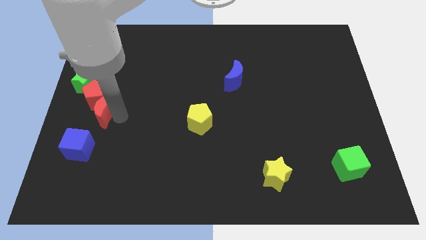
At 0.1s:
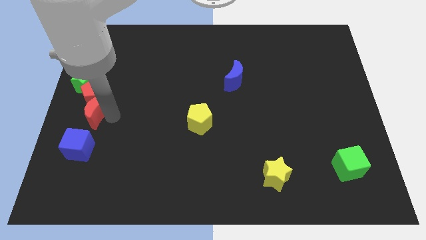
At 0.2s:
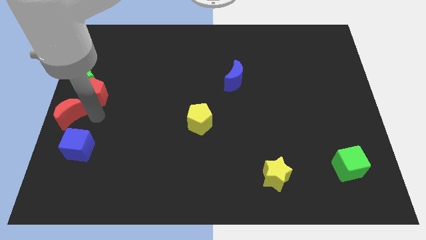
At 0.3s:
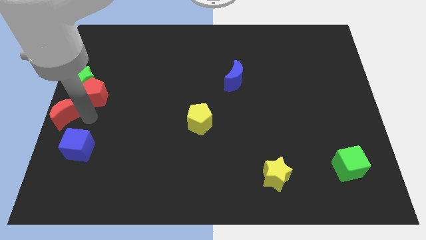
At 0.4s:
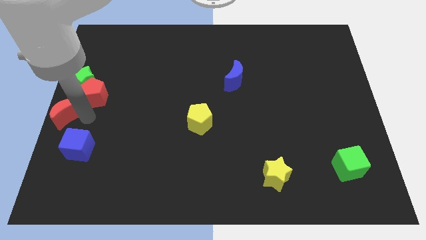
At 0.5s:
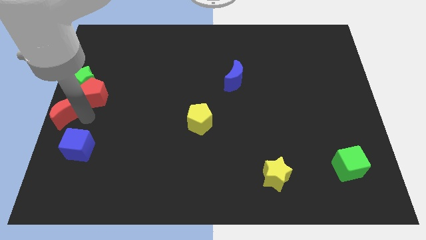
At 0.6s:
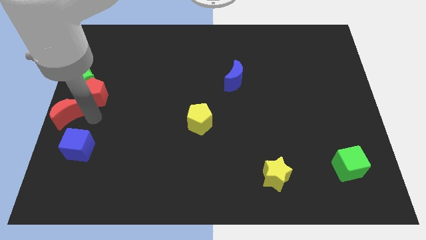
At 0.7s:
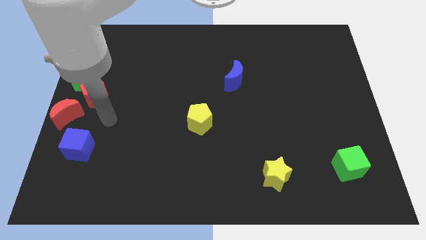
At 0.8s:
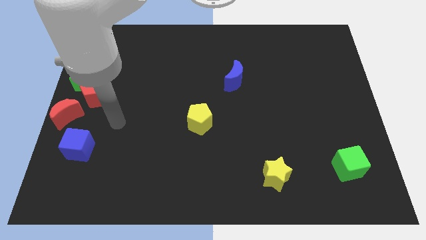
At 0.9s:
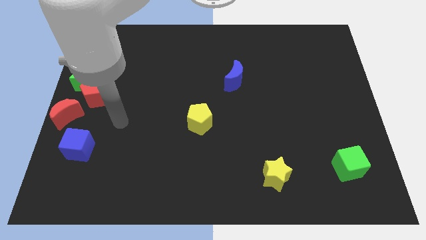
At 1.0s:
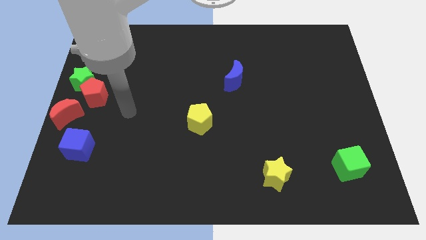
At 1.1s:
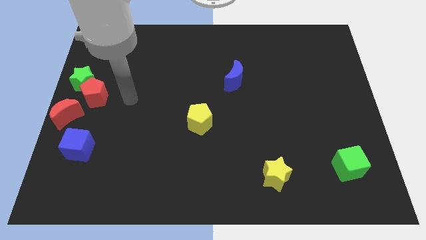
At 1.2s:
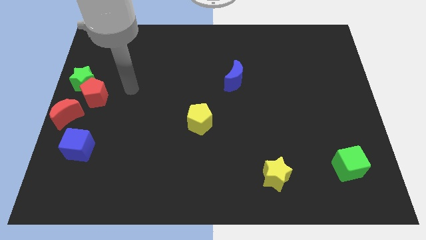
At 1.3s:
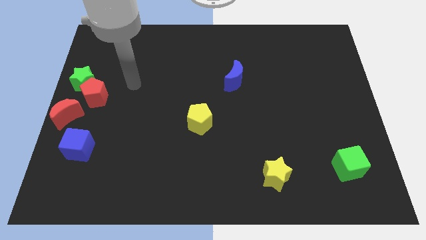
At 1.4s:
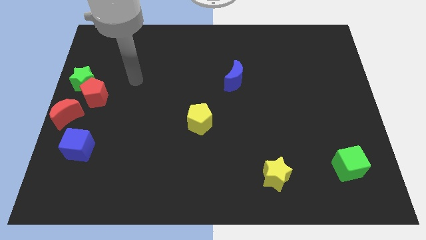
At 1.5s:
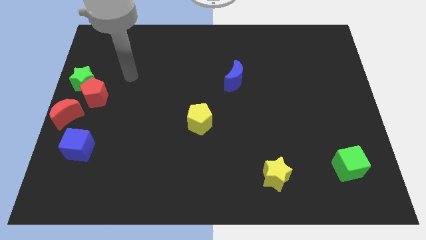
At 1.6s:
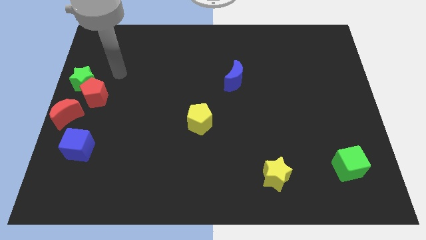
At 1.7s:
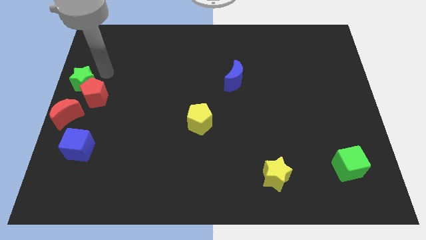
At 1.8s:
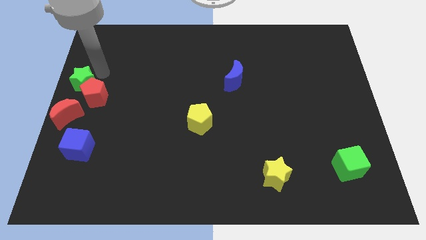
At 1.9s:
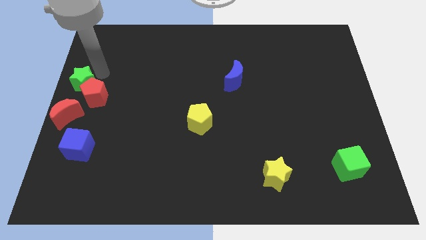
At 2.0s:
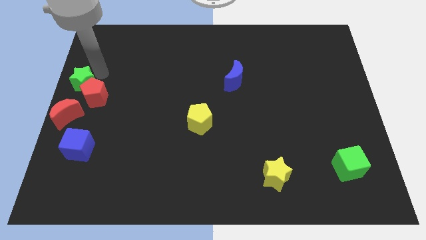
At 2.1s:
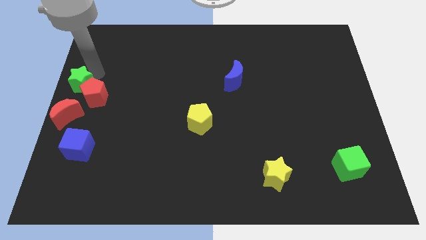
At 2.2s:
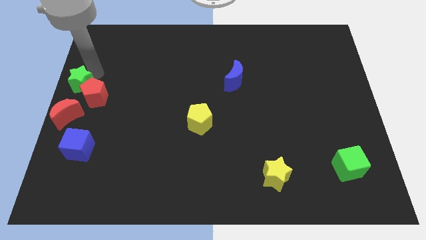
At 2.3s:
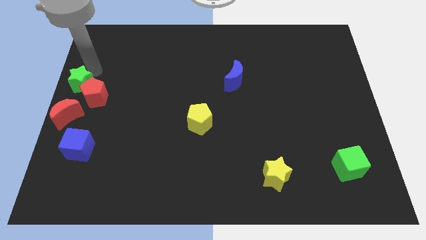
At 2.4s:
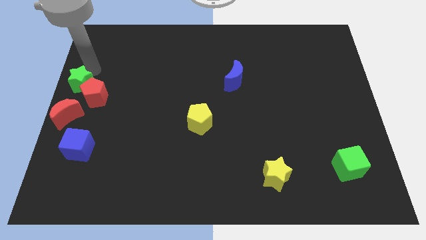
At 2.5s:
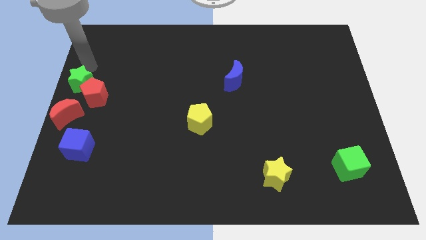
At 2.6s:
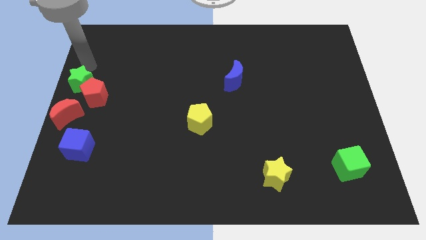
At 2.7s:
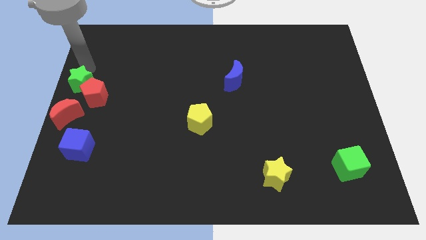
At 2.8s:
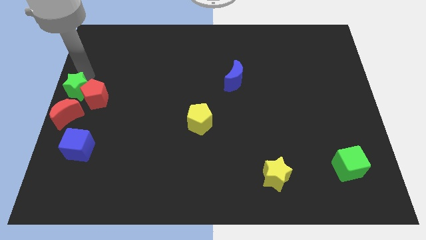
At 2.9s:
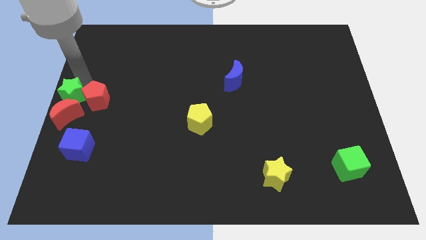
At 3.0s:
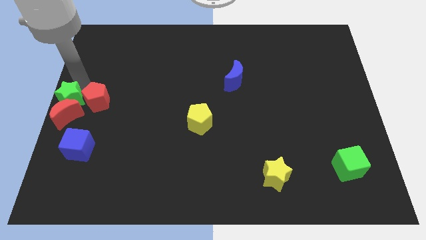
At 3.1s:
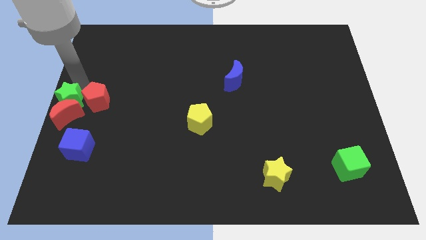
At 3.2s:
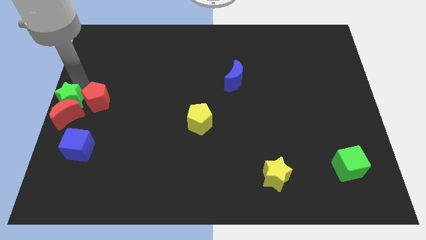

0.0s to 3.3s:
place the red moon towards the left side of the board

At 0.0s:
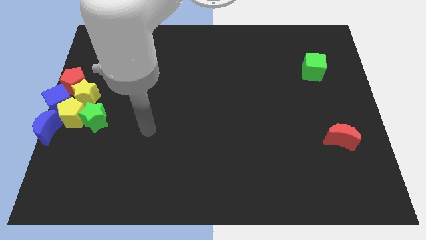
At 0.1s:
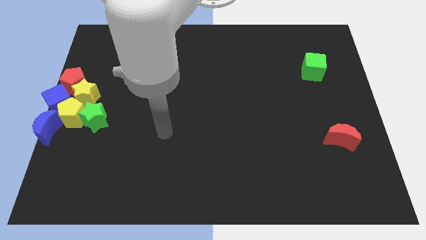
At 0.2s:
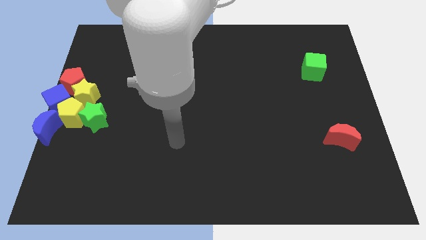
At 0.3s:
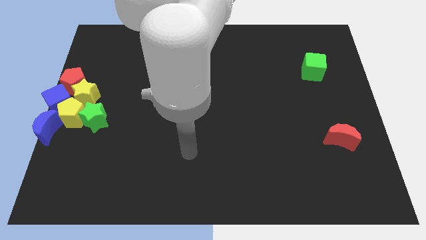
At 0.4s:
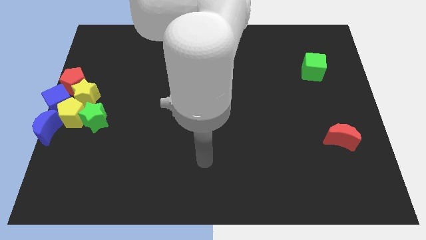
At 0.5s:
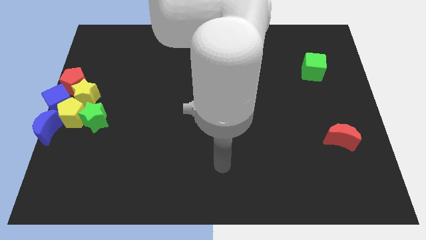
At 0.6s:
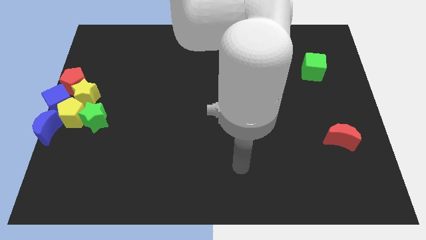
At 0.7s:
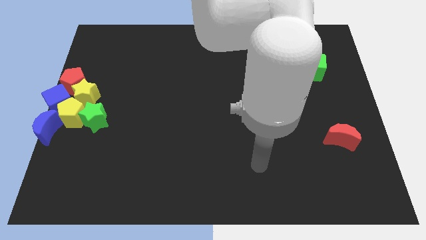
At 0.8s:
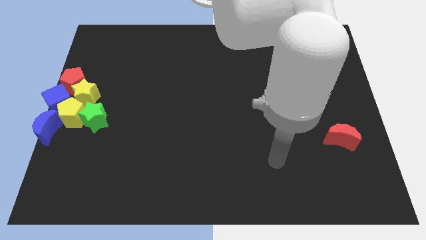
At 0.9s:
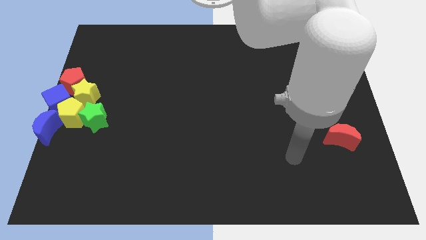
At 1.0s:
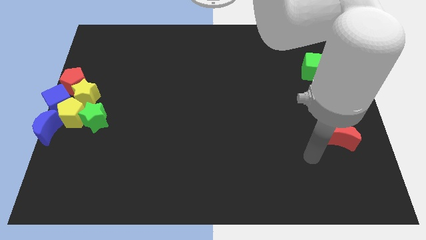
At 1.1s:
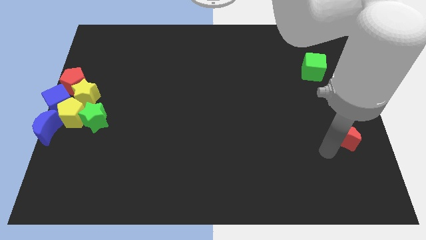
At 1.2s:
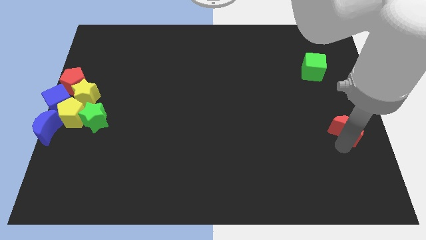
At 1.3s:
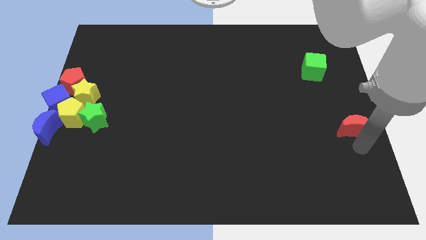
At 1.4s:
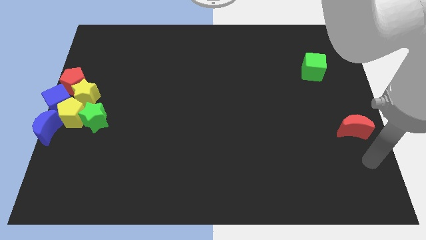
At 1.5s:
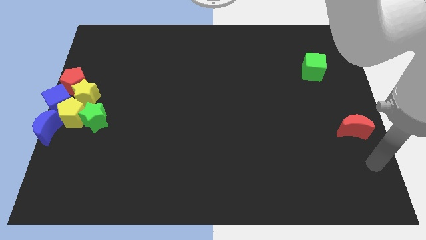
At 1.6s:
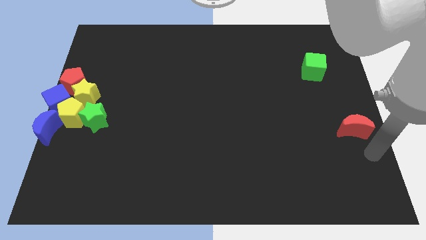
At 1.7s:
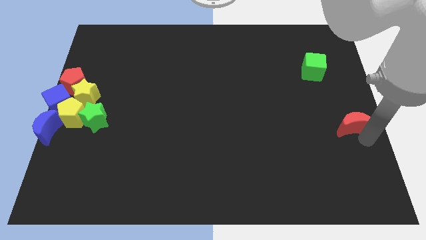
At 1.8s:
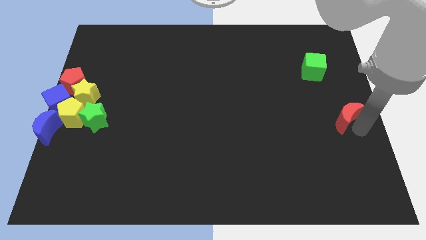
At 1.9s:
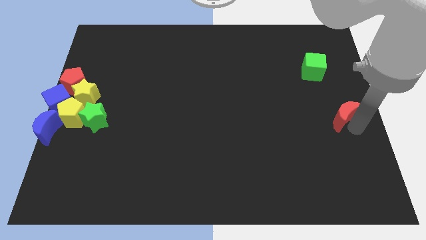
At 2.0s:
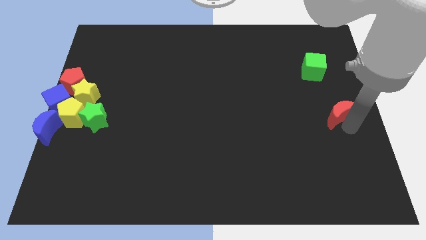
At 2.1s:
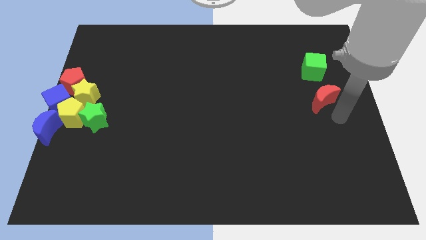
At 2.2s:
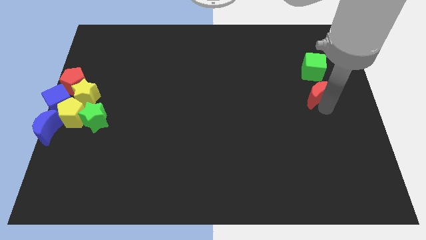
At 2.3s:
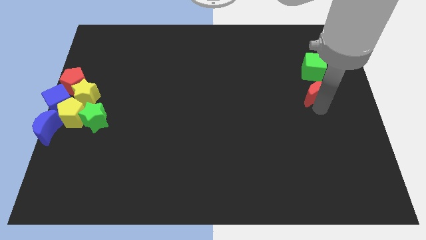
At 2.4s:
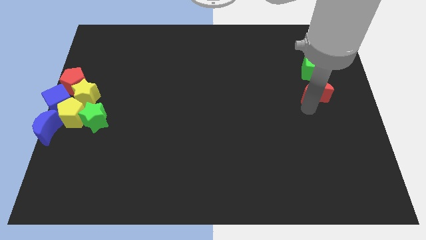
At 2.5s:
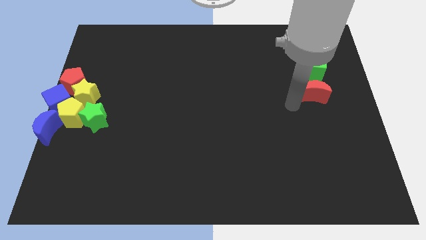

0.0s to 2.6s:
move the red crescent below the green cube

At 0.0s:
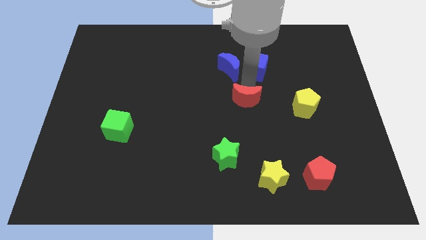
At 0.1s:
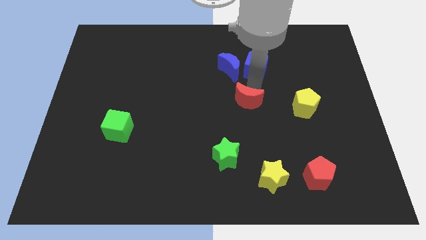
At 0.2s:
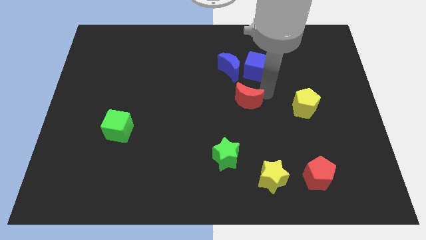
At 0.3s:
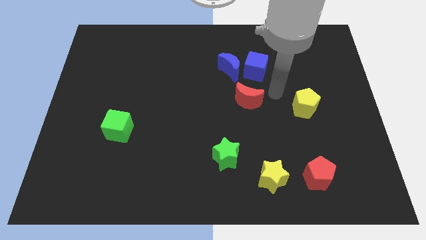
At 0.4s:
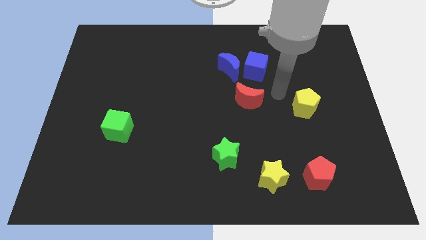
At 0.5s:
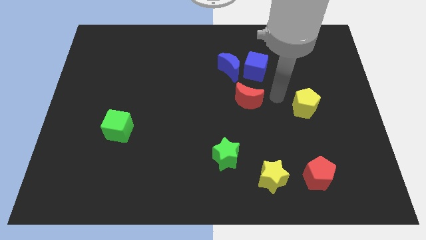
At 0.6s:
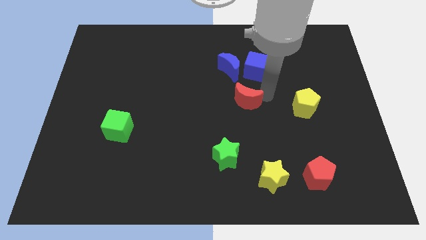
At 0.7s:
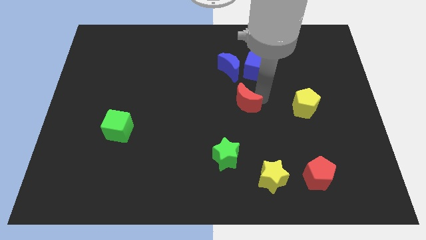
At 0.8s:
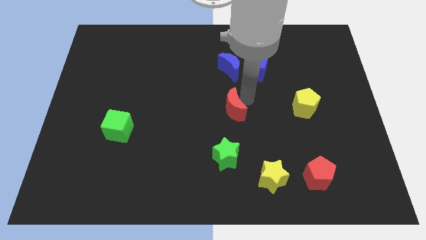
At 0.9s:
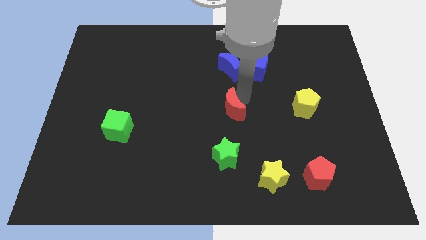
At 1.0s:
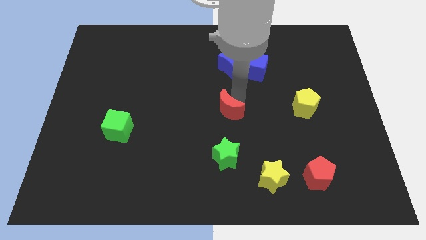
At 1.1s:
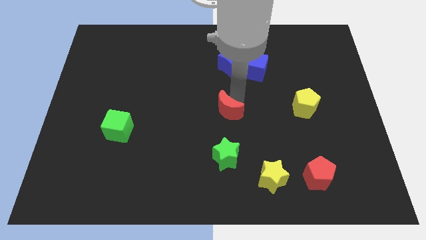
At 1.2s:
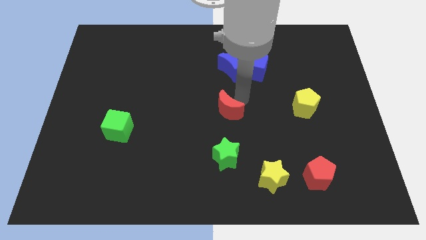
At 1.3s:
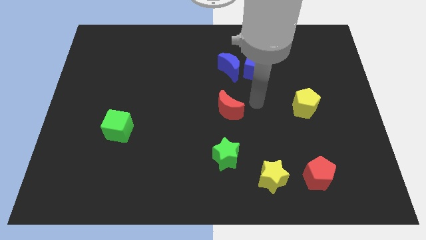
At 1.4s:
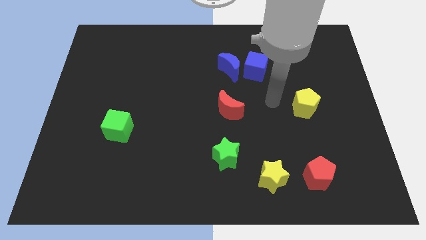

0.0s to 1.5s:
push the red crescent in between the blue crescent and the green star

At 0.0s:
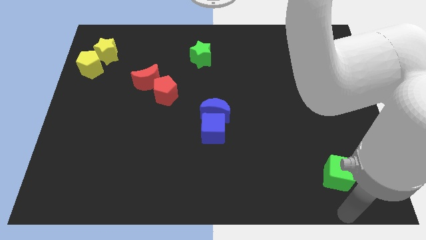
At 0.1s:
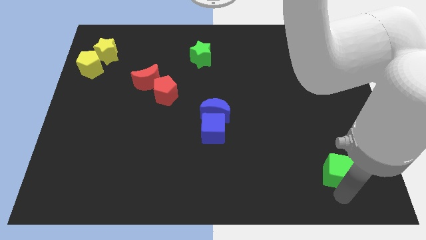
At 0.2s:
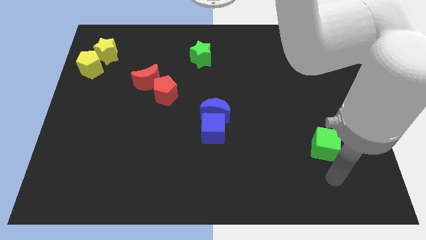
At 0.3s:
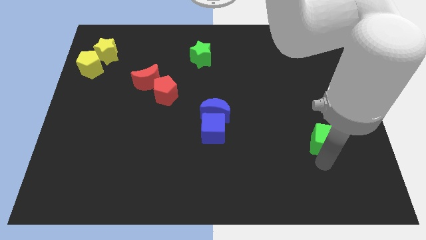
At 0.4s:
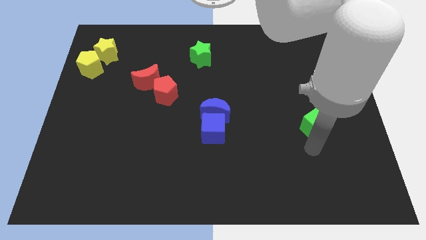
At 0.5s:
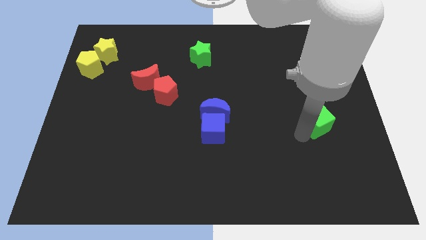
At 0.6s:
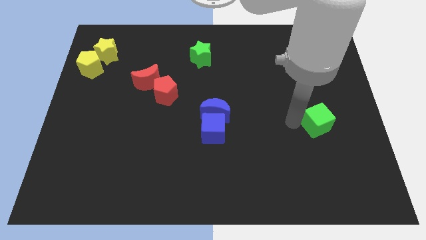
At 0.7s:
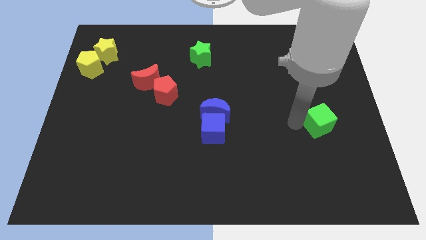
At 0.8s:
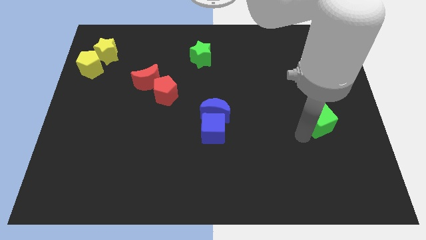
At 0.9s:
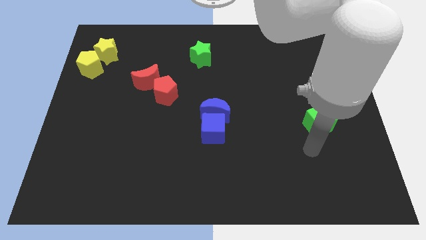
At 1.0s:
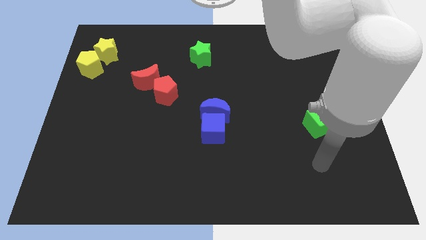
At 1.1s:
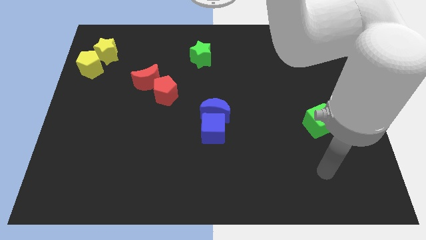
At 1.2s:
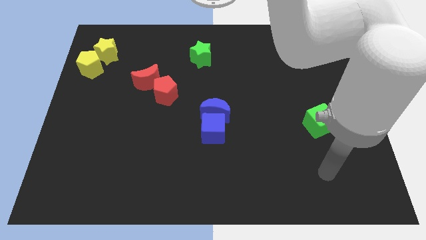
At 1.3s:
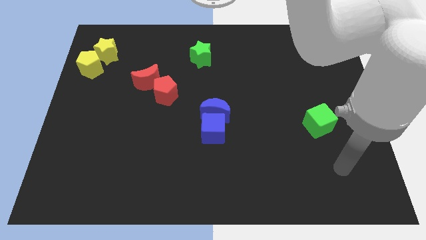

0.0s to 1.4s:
move the green cube parallel to the right of the blue crescent

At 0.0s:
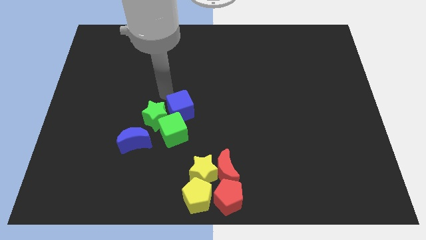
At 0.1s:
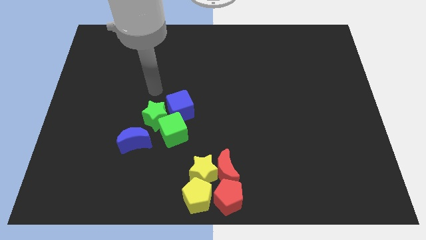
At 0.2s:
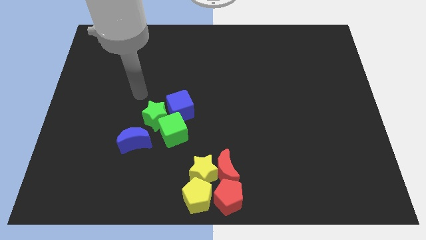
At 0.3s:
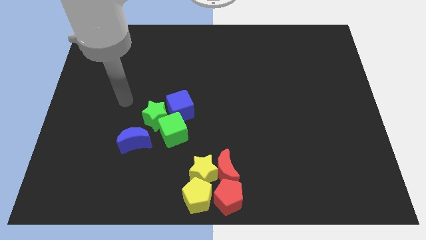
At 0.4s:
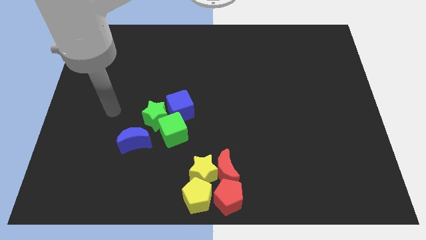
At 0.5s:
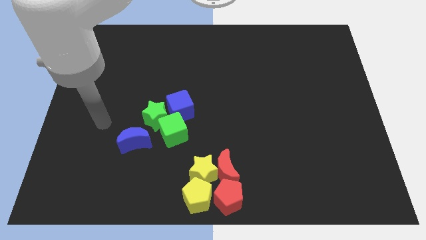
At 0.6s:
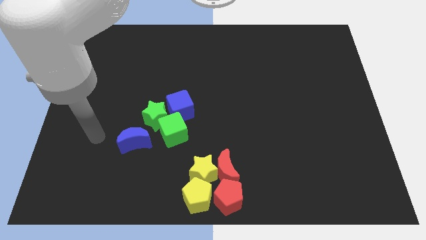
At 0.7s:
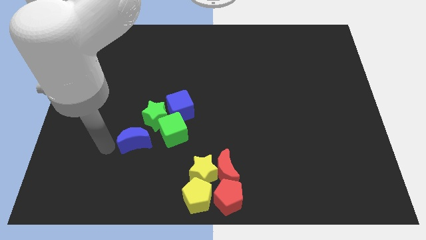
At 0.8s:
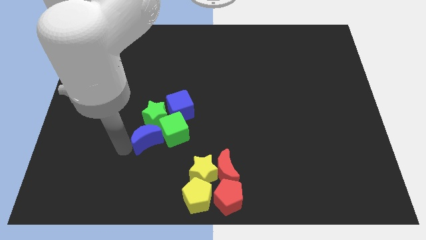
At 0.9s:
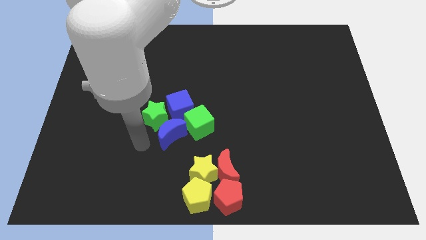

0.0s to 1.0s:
place the arm left to the blue moon
